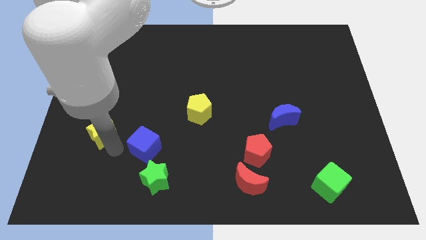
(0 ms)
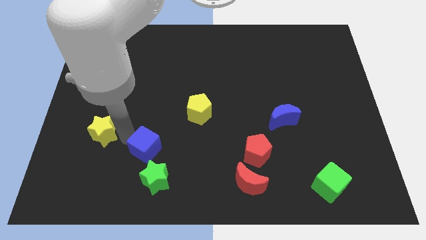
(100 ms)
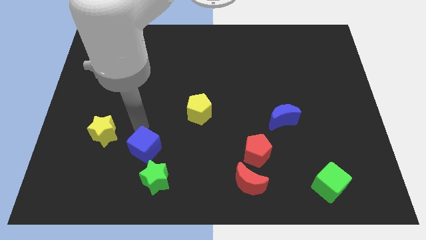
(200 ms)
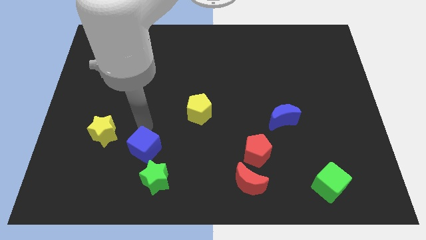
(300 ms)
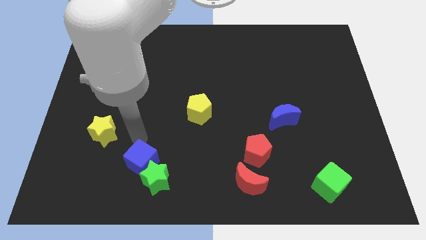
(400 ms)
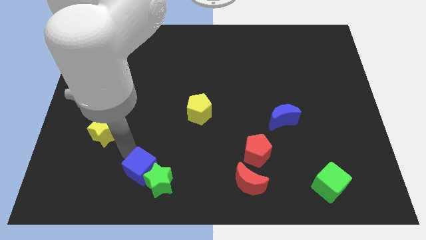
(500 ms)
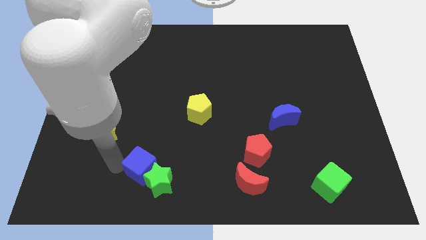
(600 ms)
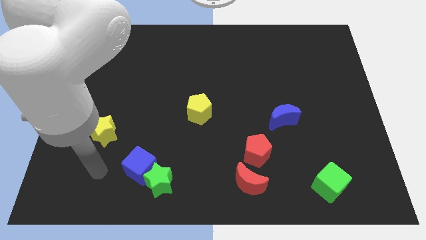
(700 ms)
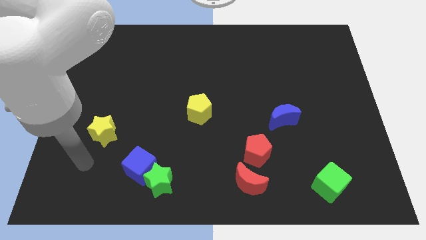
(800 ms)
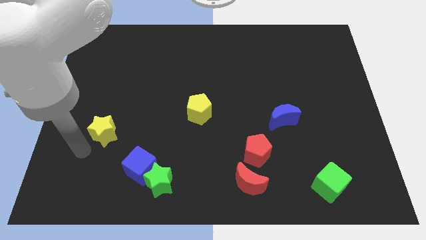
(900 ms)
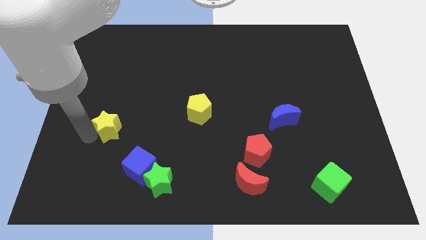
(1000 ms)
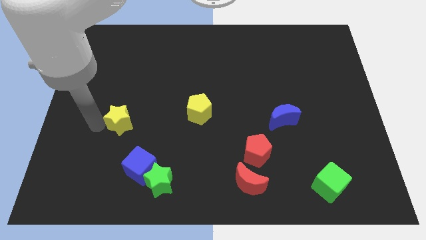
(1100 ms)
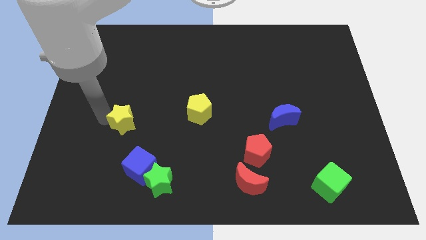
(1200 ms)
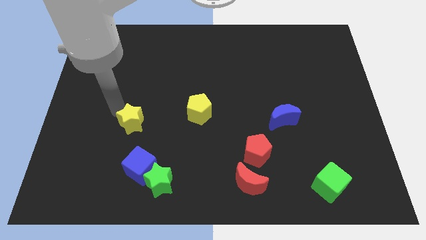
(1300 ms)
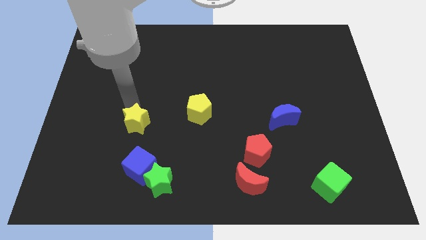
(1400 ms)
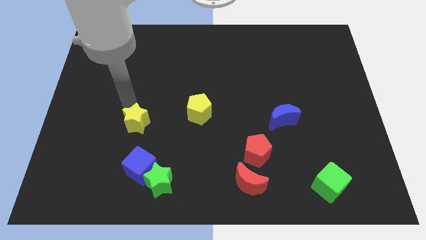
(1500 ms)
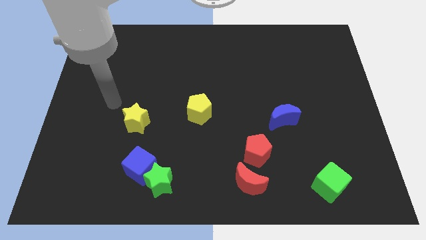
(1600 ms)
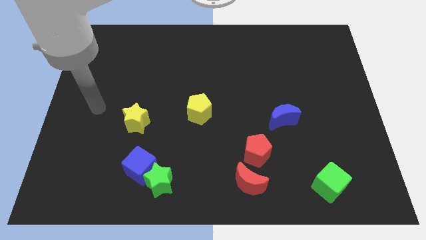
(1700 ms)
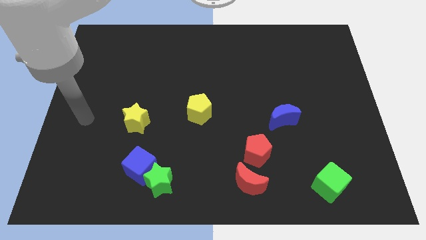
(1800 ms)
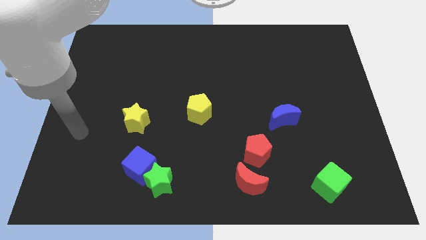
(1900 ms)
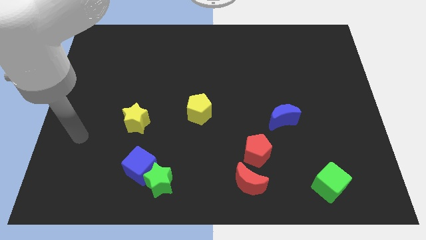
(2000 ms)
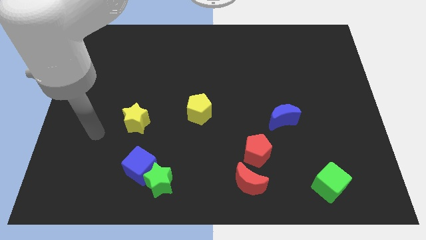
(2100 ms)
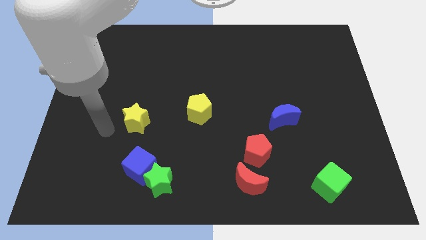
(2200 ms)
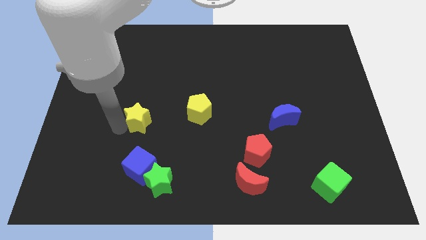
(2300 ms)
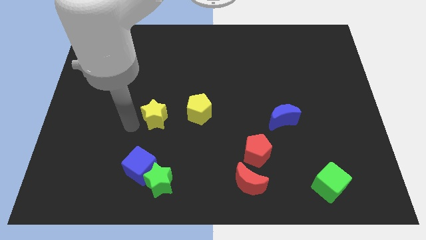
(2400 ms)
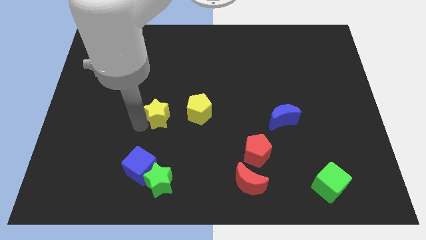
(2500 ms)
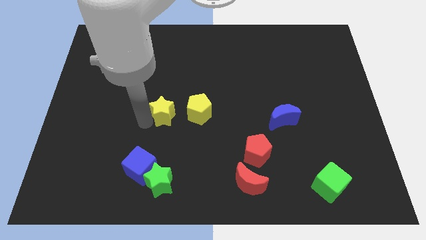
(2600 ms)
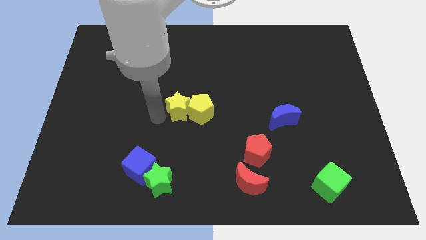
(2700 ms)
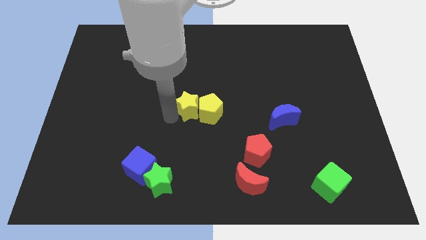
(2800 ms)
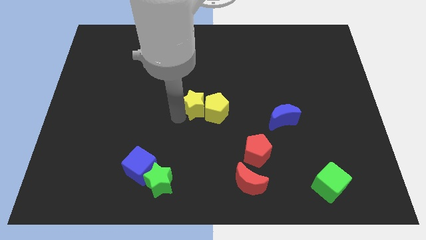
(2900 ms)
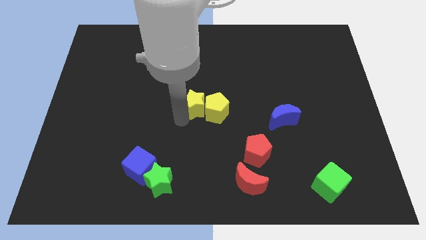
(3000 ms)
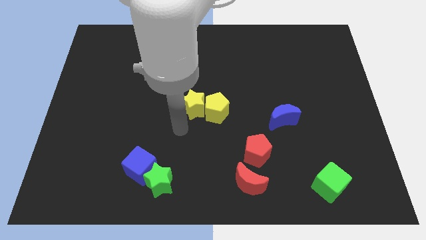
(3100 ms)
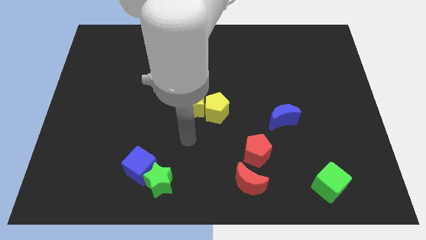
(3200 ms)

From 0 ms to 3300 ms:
slide the yellow star into the yellow pentagon

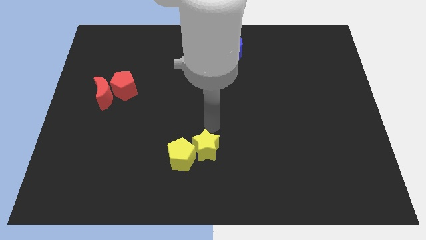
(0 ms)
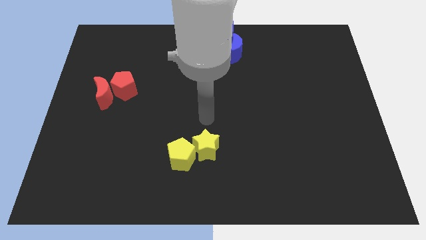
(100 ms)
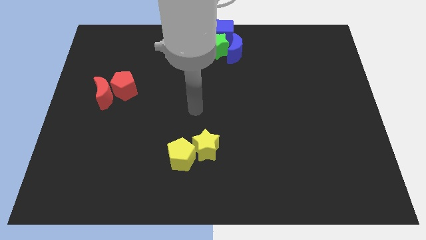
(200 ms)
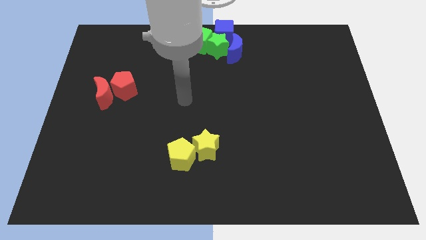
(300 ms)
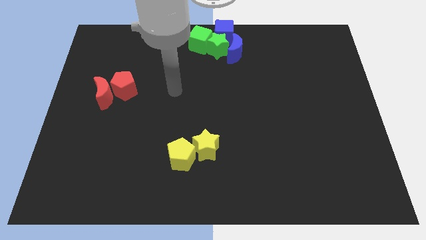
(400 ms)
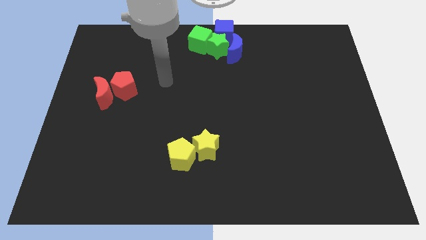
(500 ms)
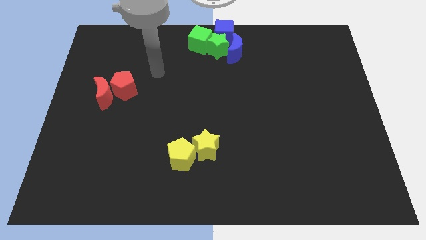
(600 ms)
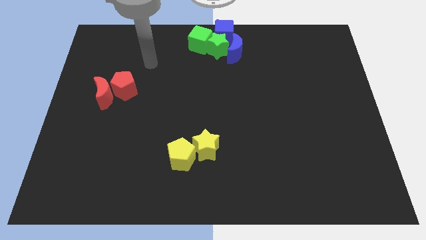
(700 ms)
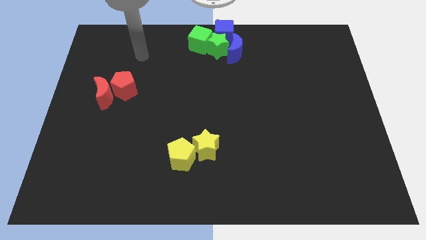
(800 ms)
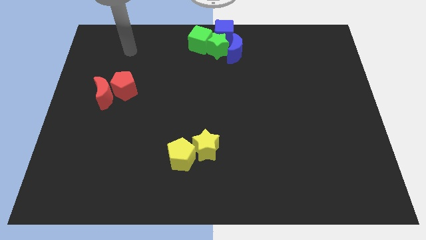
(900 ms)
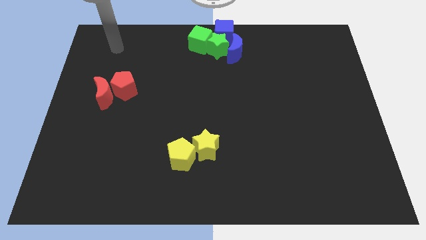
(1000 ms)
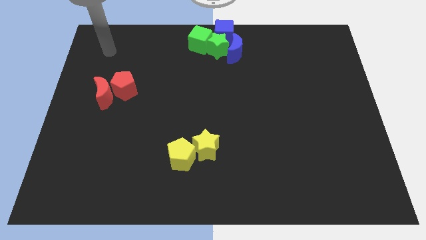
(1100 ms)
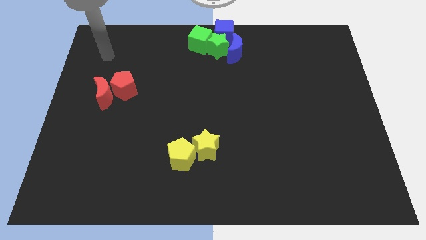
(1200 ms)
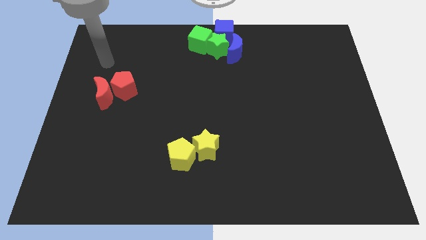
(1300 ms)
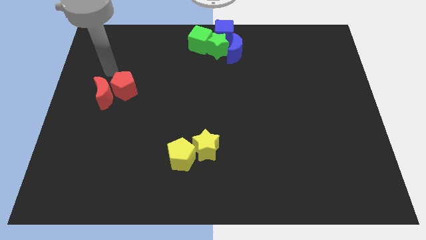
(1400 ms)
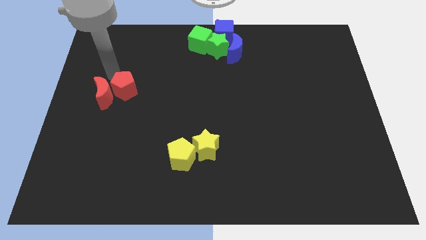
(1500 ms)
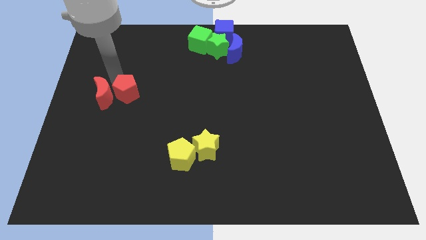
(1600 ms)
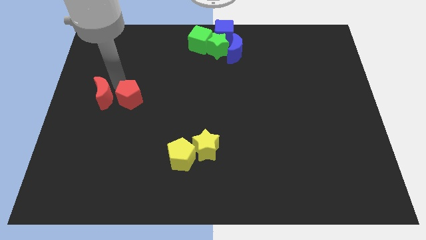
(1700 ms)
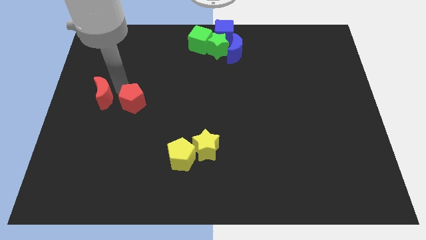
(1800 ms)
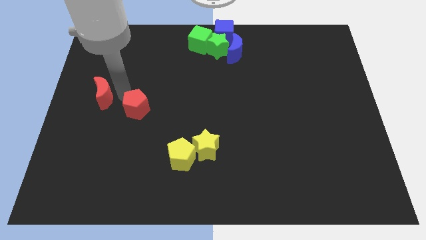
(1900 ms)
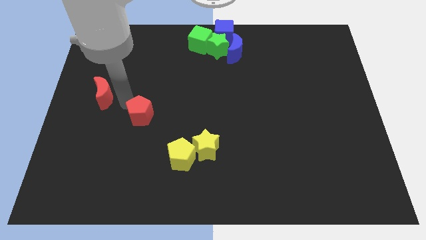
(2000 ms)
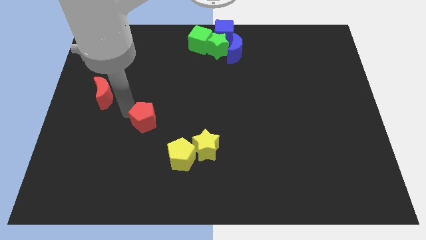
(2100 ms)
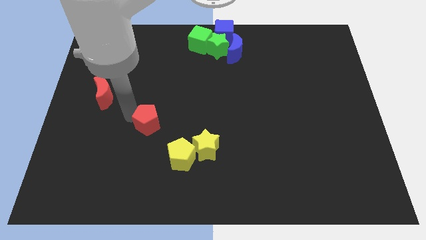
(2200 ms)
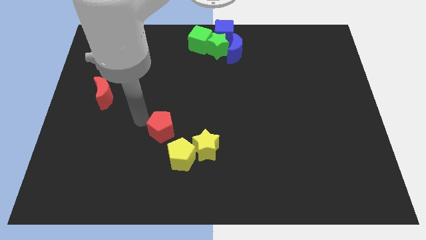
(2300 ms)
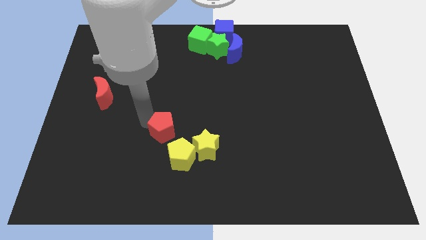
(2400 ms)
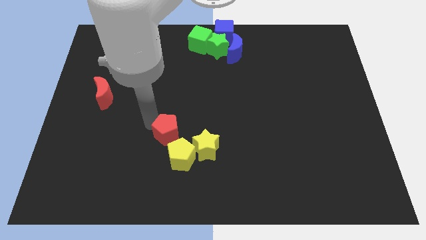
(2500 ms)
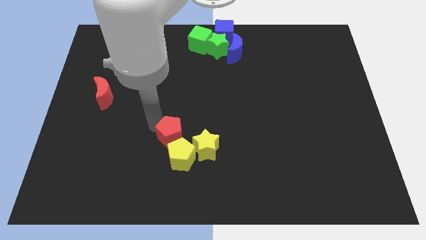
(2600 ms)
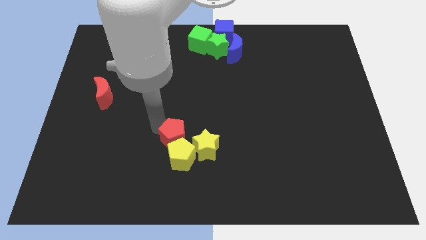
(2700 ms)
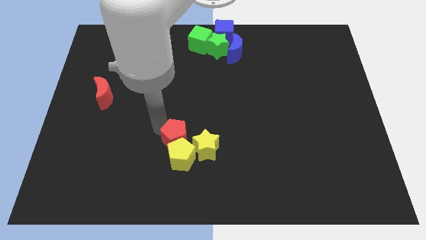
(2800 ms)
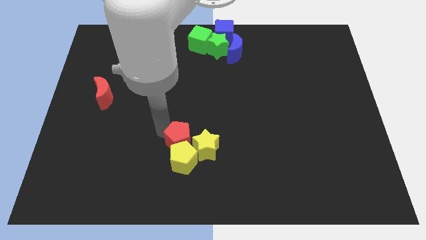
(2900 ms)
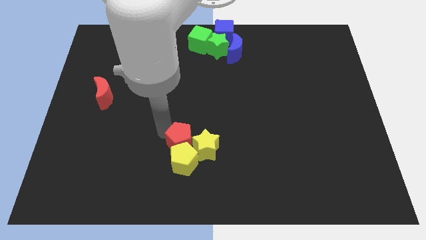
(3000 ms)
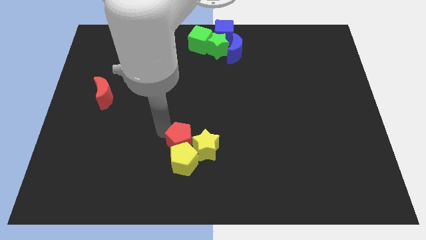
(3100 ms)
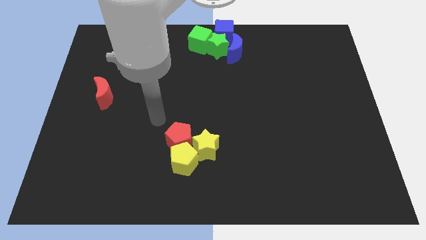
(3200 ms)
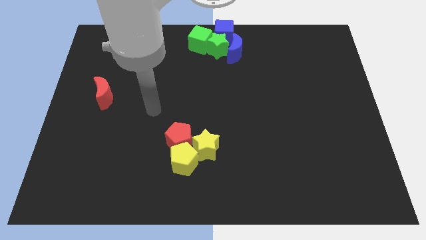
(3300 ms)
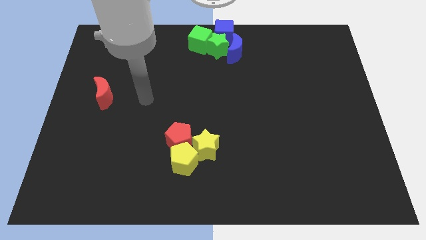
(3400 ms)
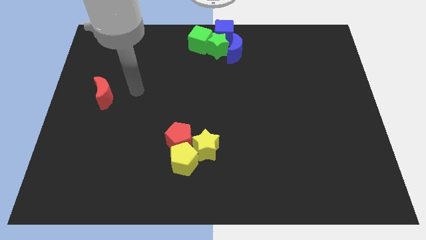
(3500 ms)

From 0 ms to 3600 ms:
move the red pentagon close to the yellow pentagon and yellow star

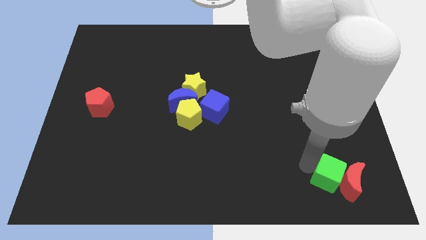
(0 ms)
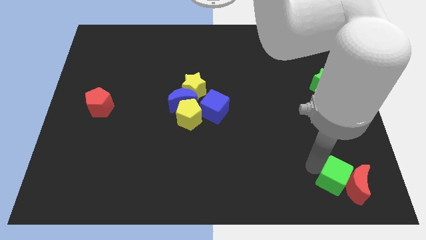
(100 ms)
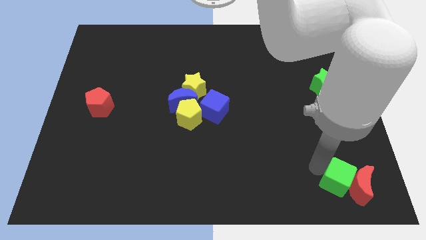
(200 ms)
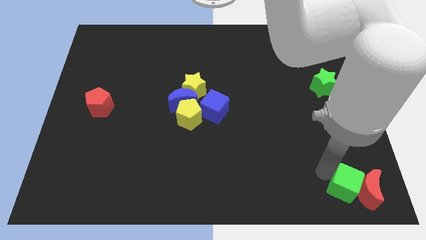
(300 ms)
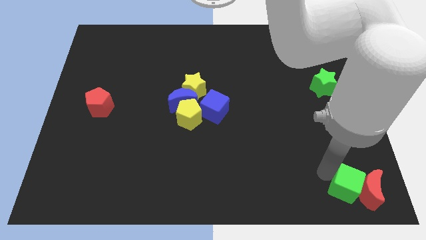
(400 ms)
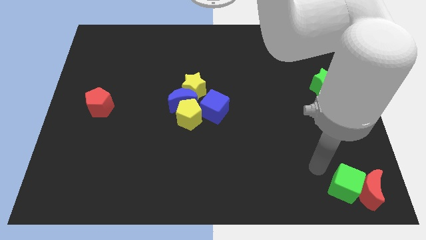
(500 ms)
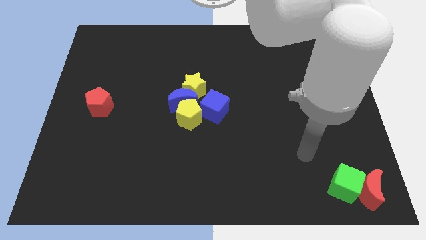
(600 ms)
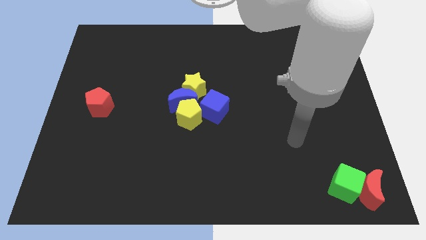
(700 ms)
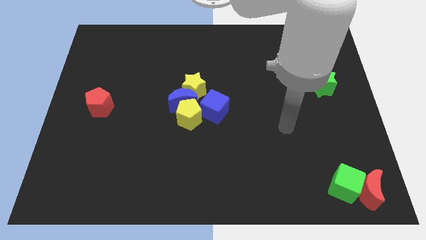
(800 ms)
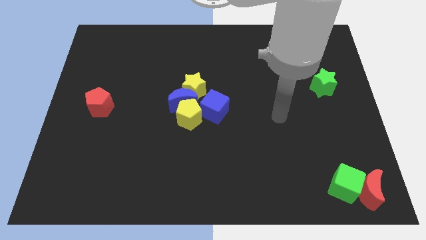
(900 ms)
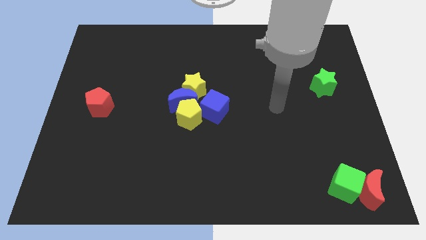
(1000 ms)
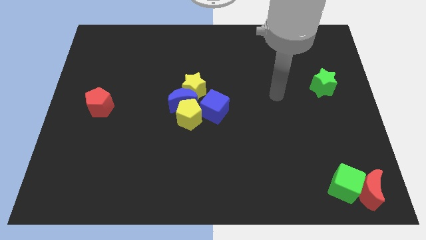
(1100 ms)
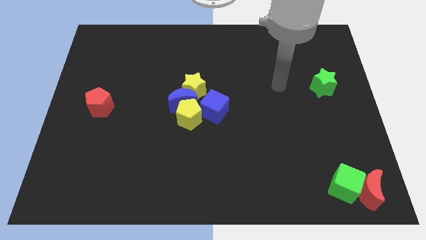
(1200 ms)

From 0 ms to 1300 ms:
place the green cube and the red moon at the bottom right corner

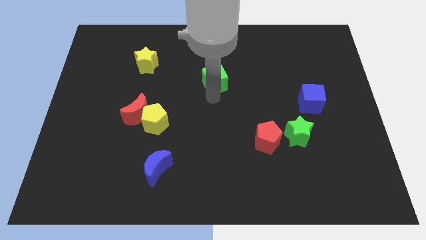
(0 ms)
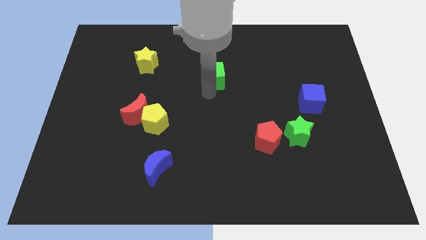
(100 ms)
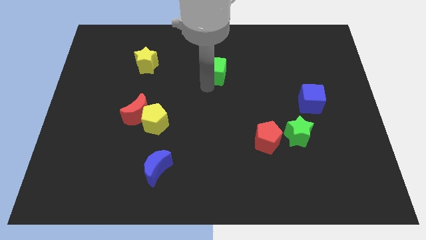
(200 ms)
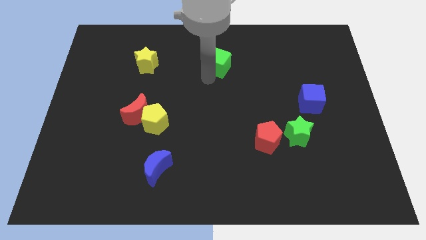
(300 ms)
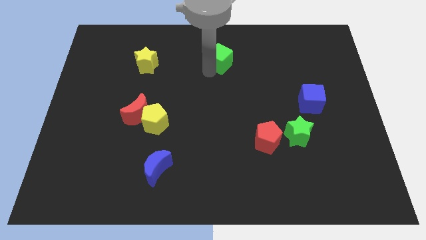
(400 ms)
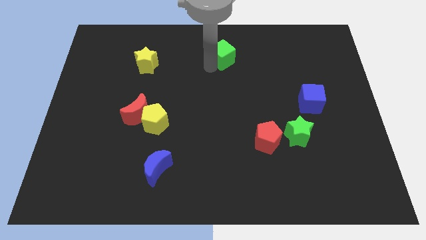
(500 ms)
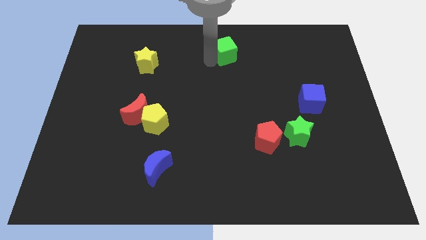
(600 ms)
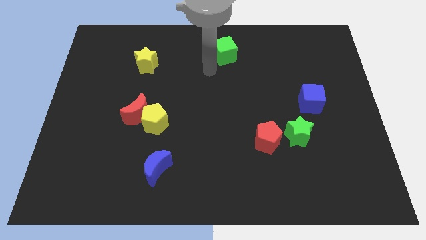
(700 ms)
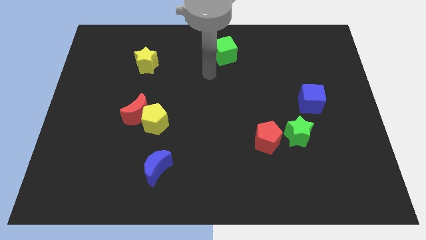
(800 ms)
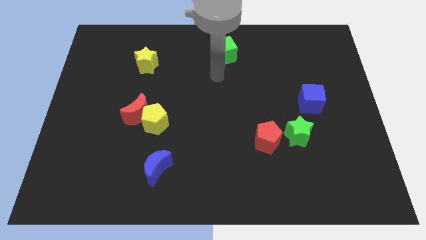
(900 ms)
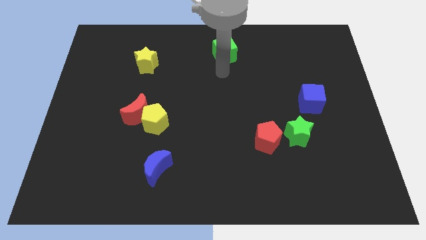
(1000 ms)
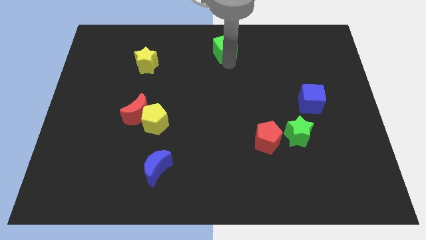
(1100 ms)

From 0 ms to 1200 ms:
push the green cube to the top of the board
